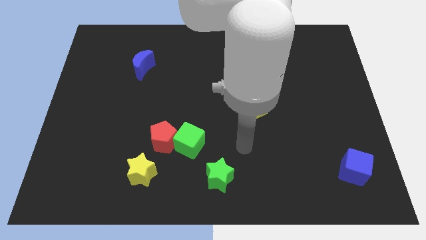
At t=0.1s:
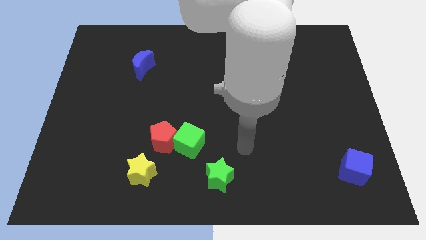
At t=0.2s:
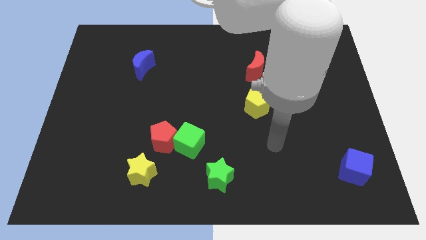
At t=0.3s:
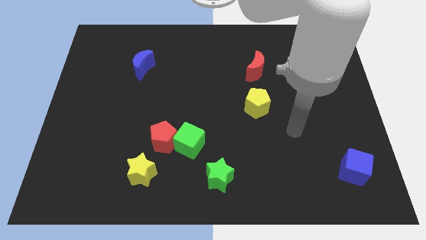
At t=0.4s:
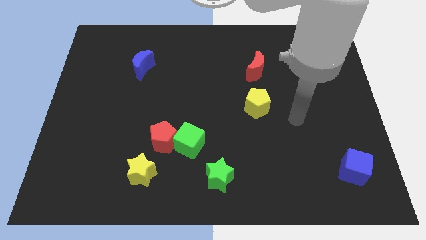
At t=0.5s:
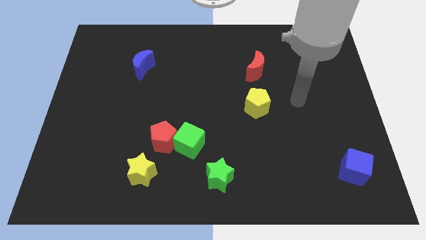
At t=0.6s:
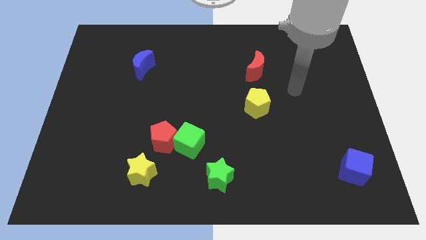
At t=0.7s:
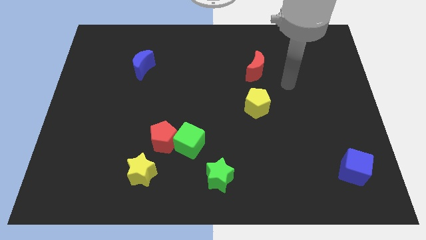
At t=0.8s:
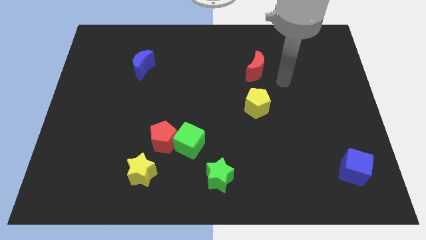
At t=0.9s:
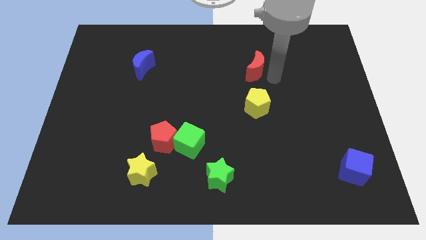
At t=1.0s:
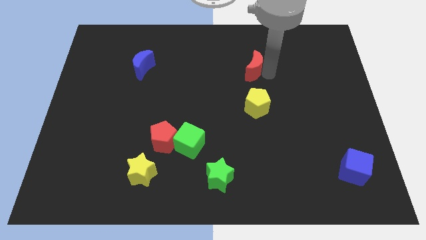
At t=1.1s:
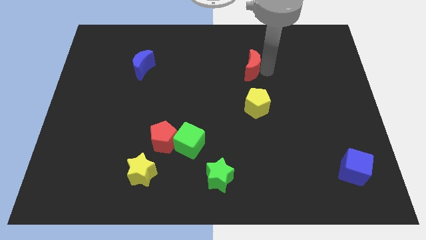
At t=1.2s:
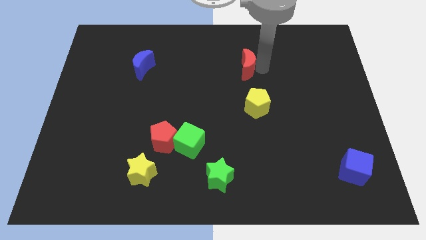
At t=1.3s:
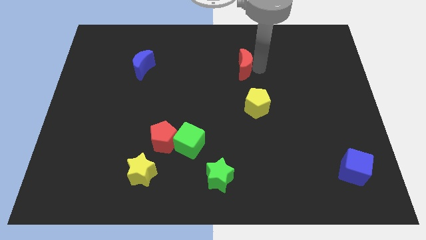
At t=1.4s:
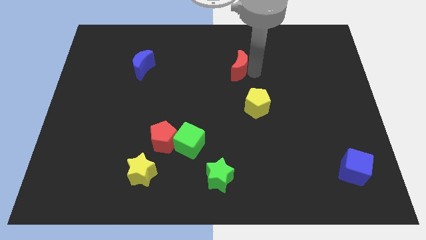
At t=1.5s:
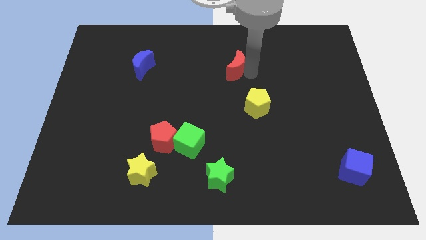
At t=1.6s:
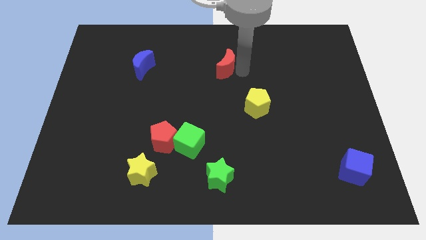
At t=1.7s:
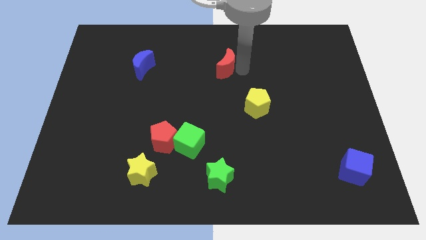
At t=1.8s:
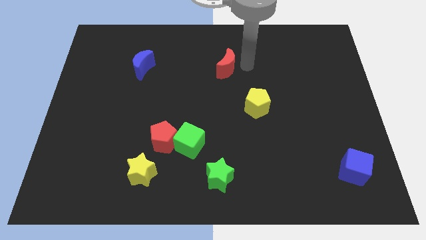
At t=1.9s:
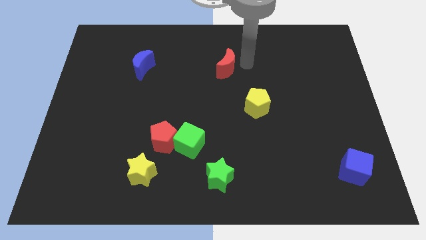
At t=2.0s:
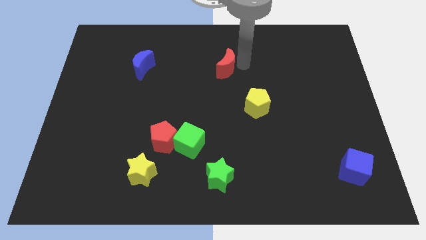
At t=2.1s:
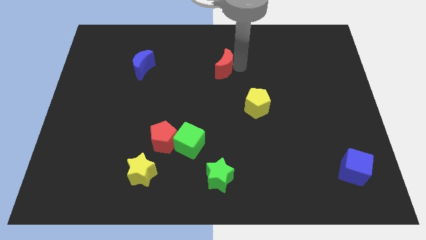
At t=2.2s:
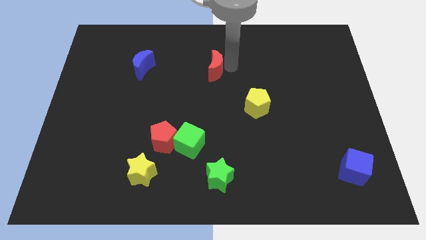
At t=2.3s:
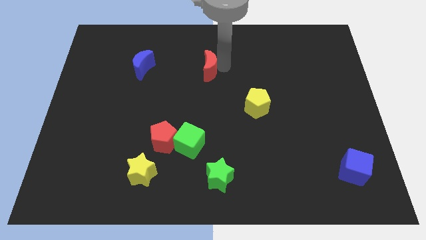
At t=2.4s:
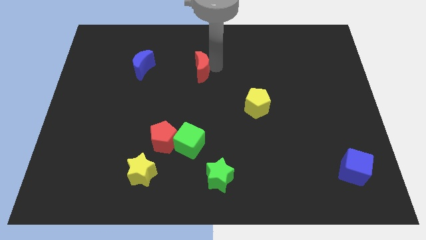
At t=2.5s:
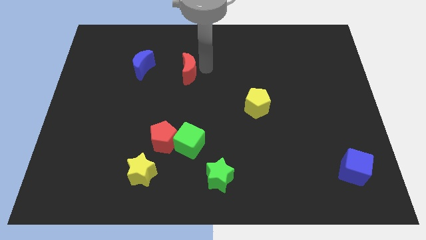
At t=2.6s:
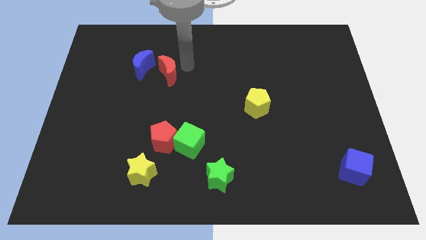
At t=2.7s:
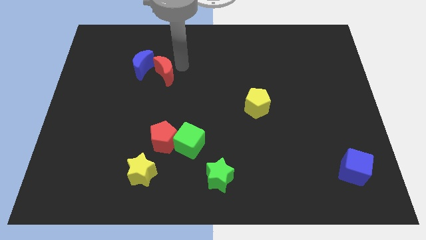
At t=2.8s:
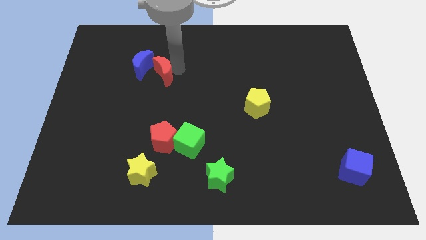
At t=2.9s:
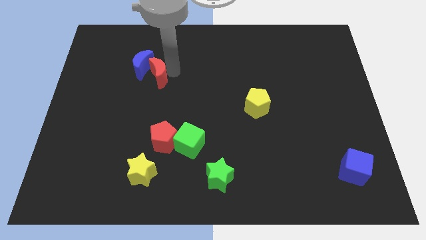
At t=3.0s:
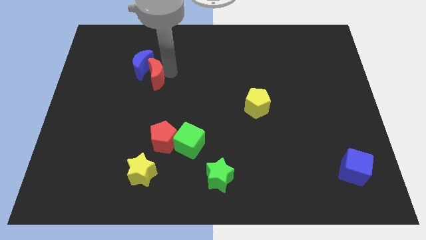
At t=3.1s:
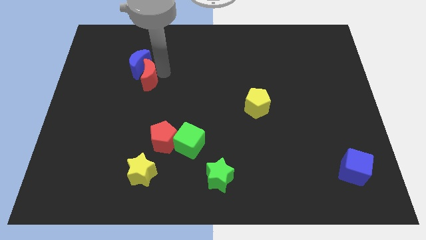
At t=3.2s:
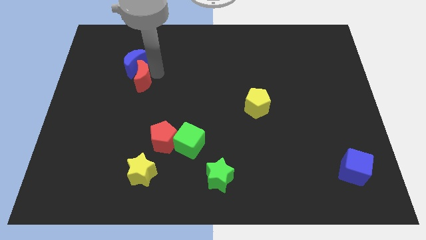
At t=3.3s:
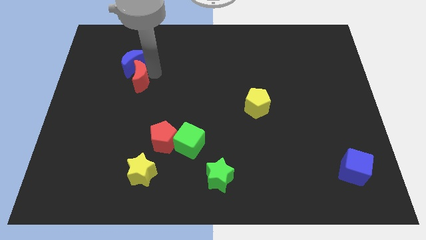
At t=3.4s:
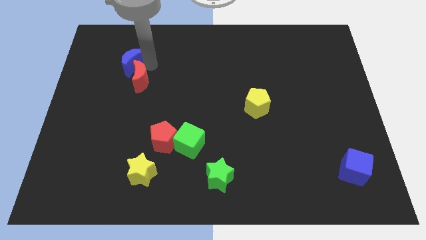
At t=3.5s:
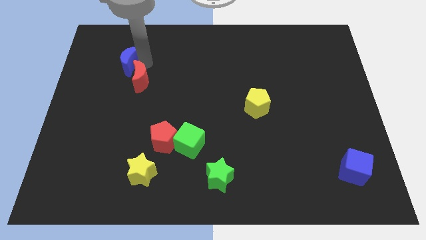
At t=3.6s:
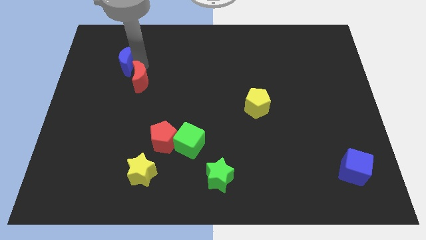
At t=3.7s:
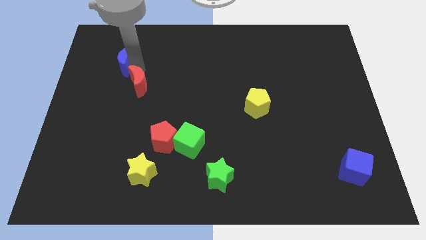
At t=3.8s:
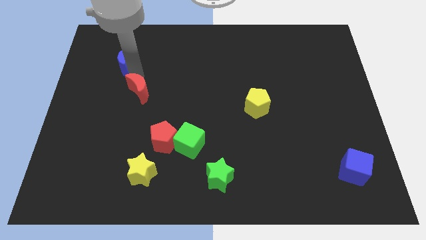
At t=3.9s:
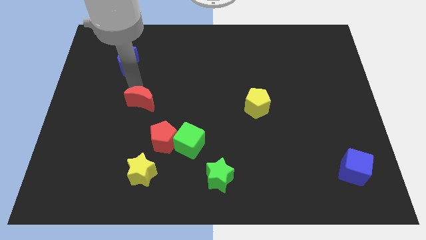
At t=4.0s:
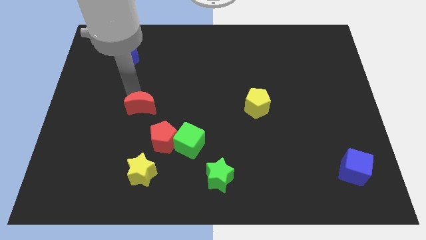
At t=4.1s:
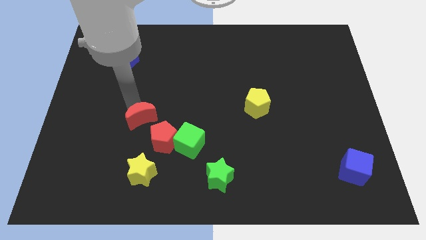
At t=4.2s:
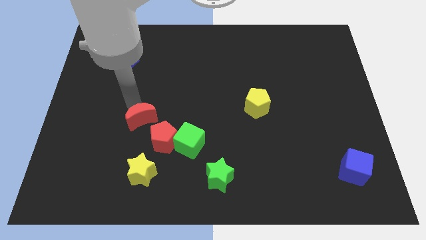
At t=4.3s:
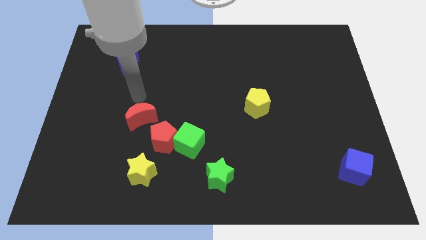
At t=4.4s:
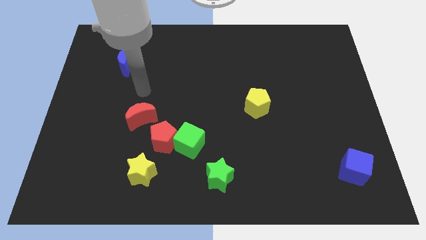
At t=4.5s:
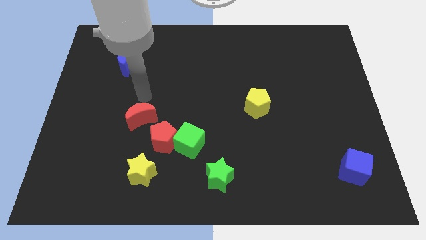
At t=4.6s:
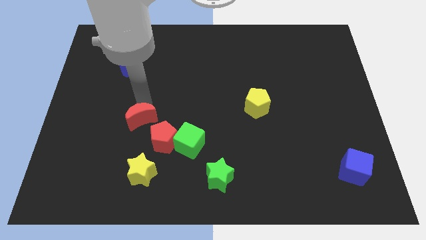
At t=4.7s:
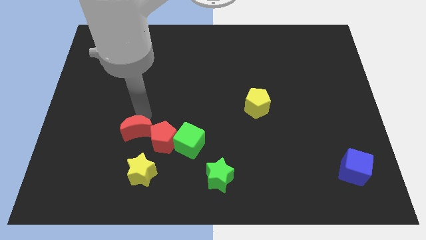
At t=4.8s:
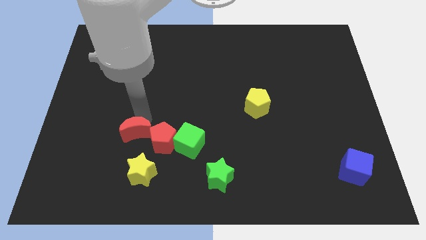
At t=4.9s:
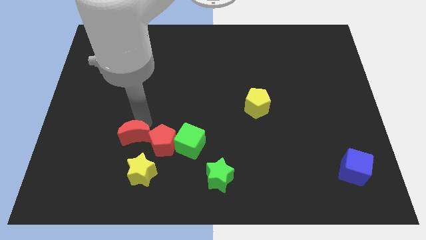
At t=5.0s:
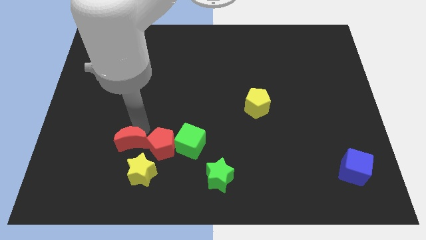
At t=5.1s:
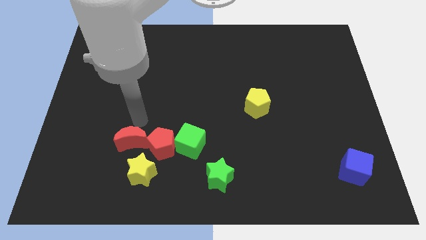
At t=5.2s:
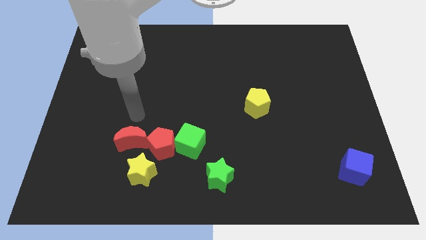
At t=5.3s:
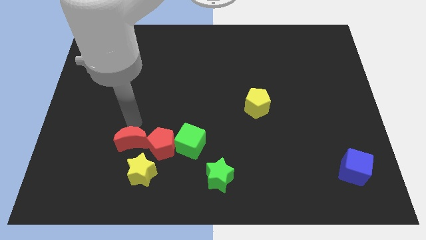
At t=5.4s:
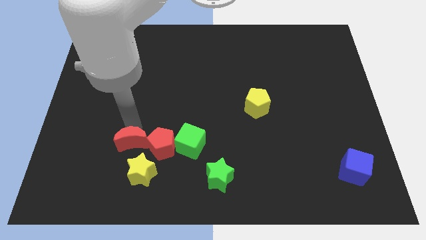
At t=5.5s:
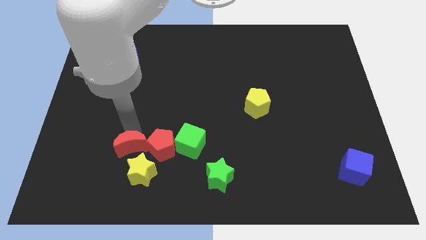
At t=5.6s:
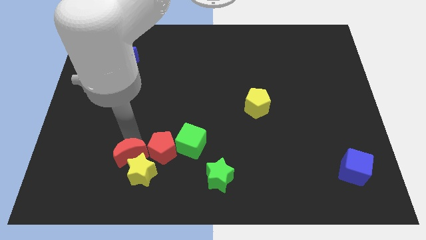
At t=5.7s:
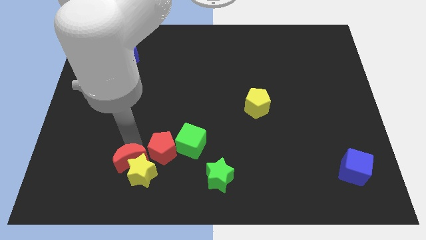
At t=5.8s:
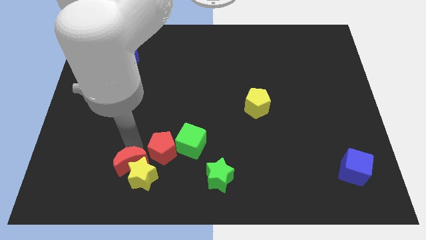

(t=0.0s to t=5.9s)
slide the red moon to the yellow star

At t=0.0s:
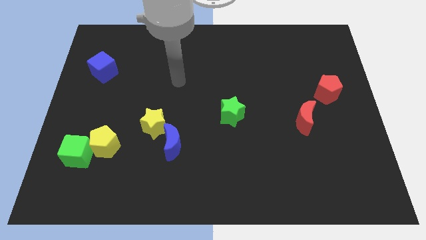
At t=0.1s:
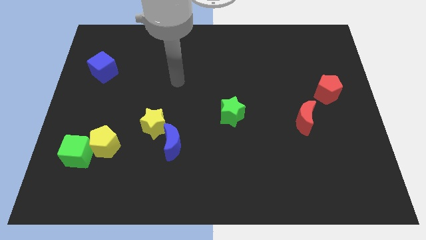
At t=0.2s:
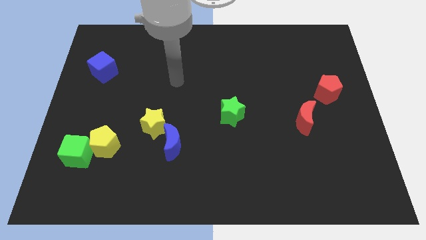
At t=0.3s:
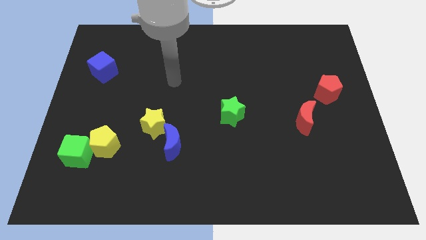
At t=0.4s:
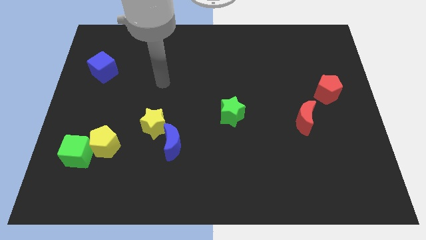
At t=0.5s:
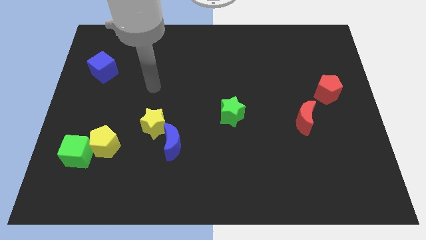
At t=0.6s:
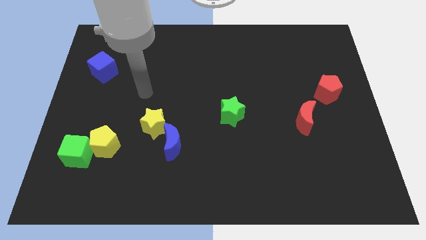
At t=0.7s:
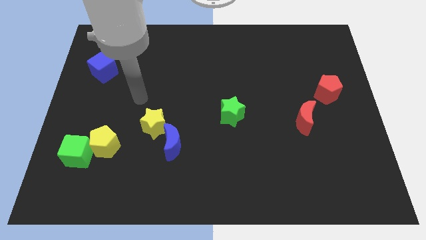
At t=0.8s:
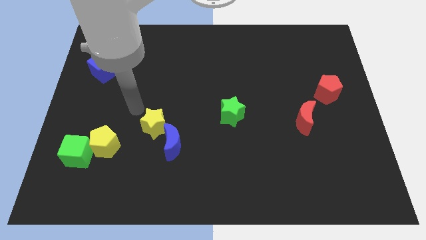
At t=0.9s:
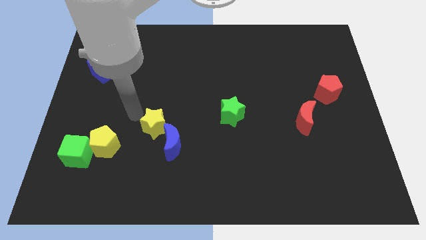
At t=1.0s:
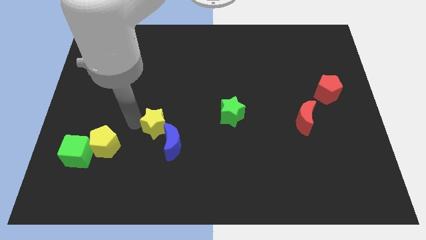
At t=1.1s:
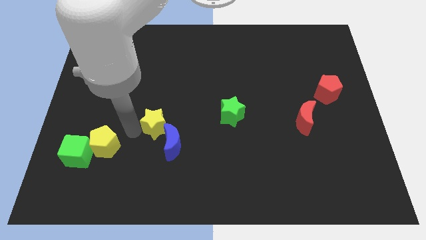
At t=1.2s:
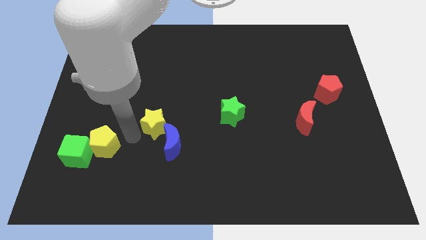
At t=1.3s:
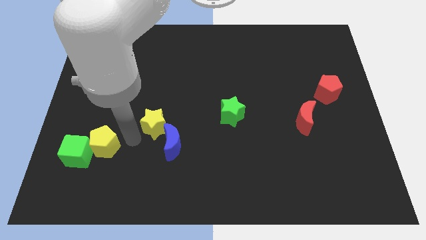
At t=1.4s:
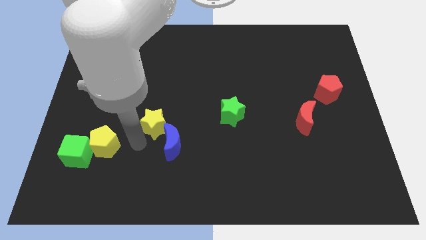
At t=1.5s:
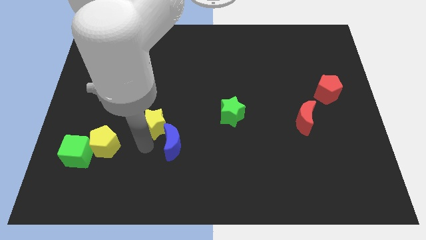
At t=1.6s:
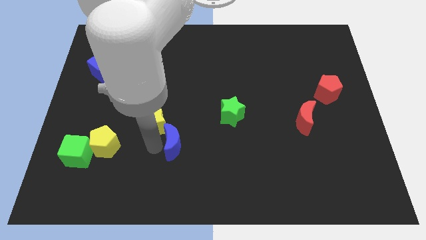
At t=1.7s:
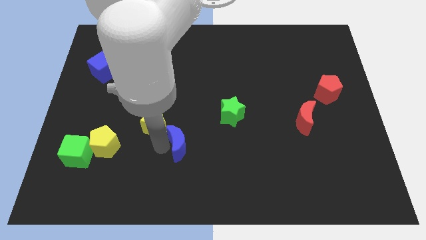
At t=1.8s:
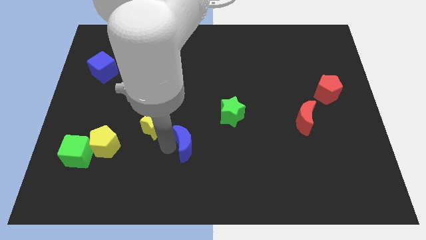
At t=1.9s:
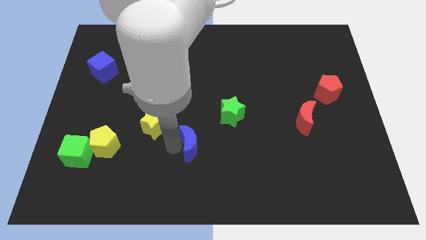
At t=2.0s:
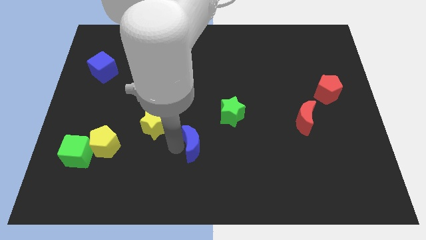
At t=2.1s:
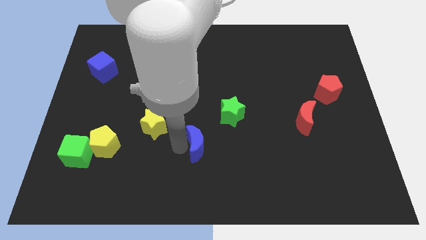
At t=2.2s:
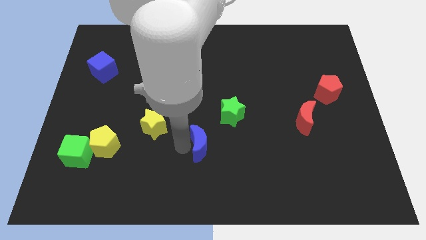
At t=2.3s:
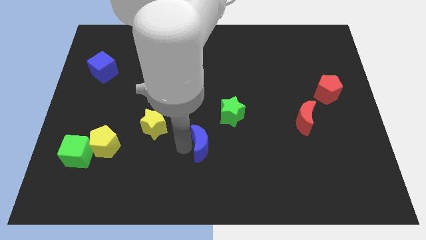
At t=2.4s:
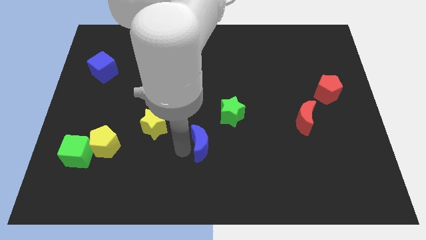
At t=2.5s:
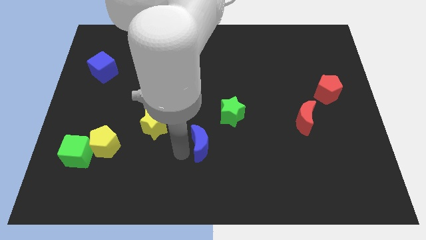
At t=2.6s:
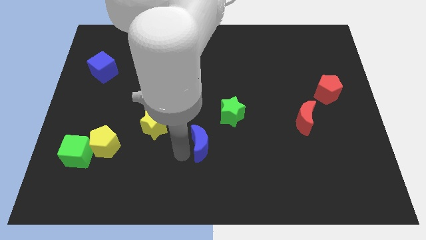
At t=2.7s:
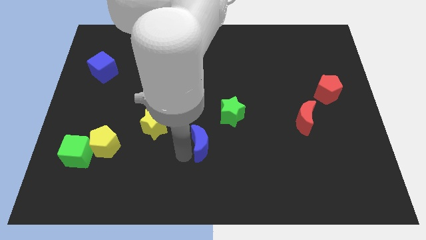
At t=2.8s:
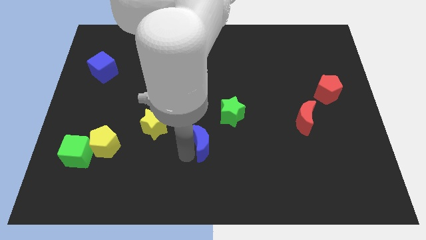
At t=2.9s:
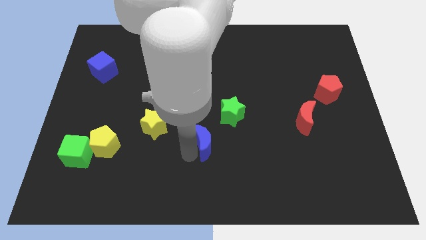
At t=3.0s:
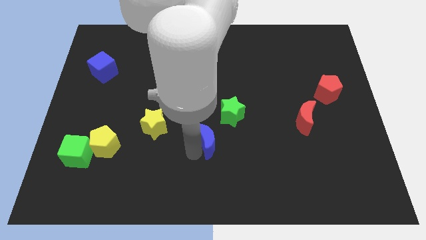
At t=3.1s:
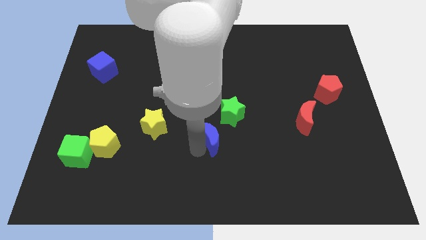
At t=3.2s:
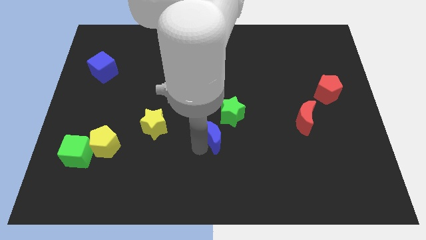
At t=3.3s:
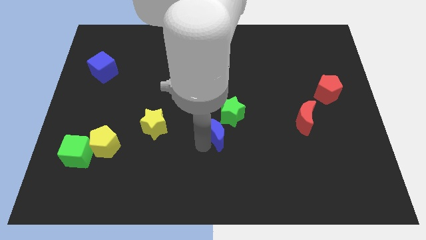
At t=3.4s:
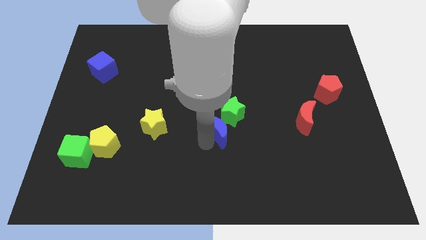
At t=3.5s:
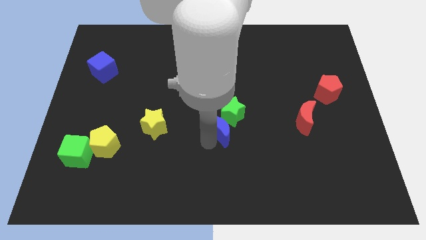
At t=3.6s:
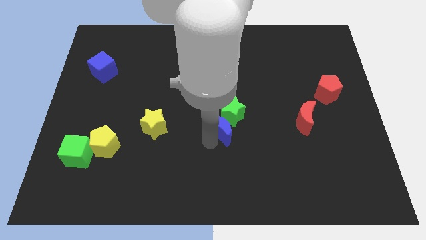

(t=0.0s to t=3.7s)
slide the blue moon to the green star
